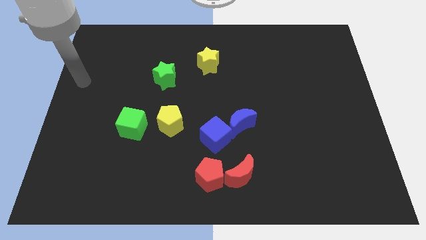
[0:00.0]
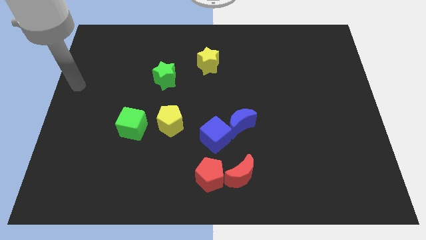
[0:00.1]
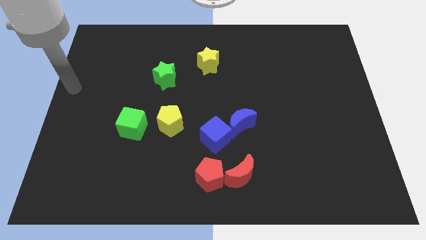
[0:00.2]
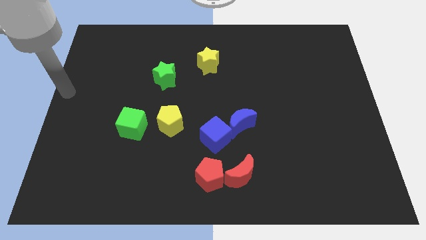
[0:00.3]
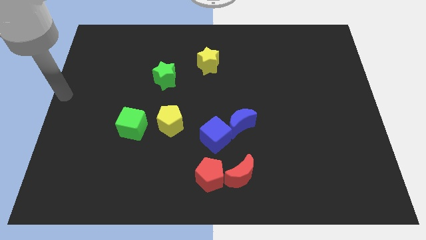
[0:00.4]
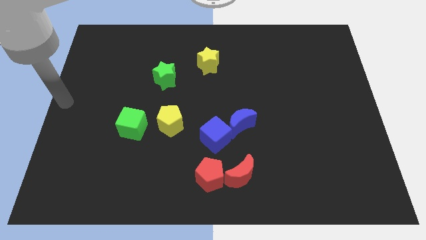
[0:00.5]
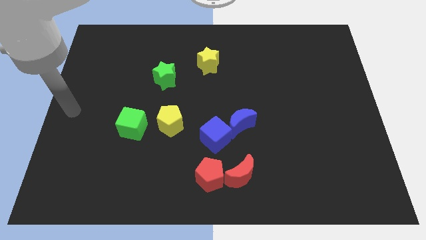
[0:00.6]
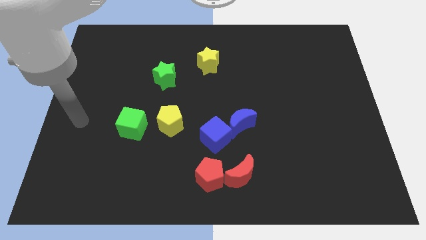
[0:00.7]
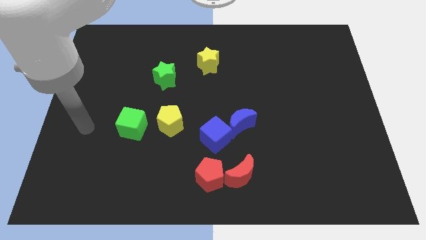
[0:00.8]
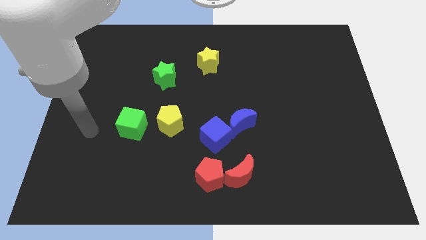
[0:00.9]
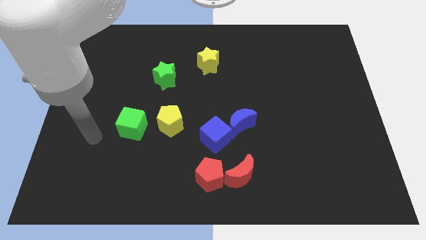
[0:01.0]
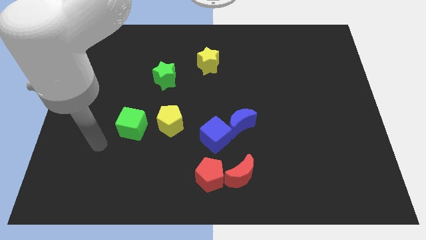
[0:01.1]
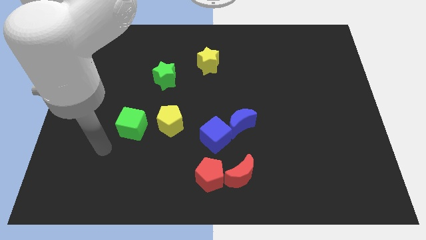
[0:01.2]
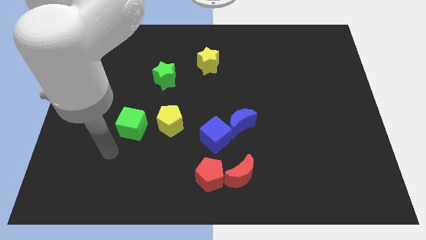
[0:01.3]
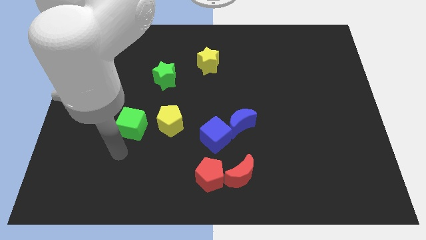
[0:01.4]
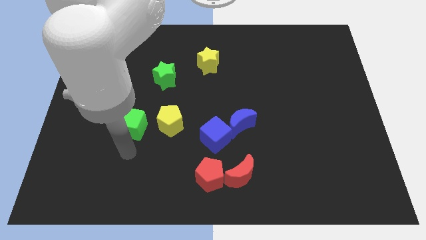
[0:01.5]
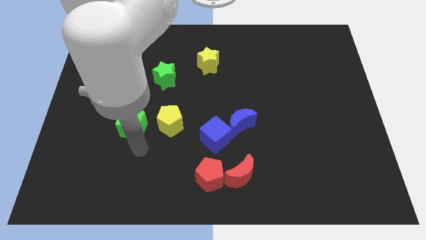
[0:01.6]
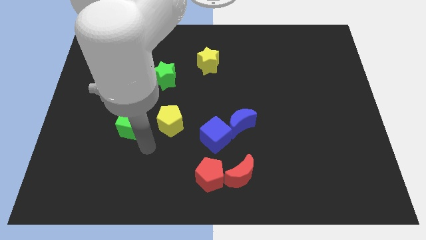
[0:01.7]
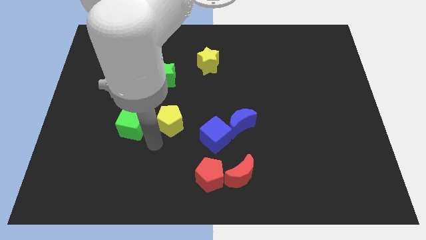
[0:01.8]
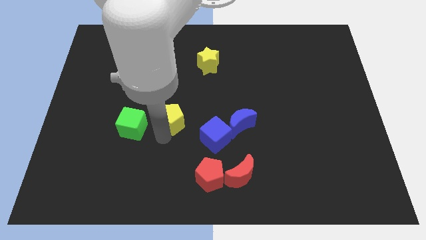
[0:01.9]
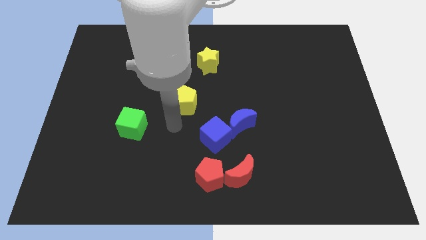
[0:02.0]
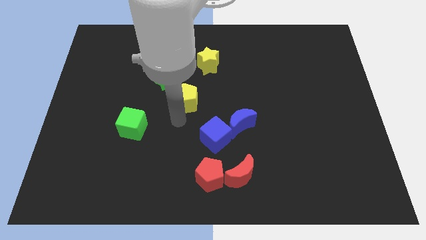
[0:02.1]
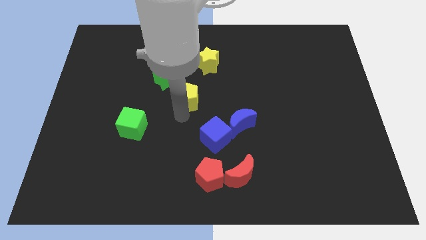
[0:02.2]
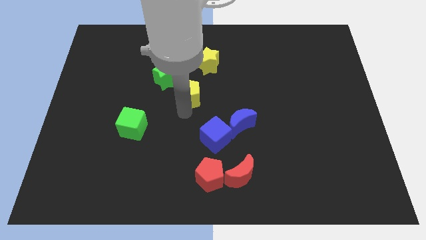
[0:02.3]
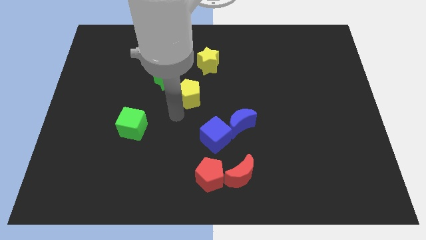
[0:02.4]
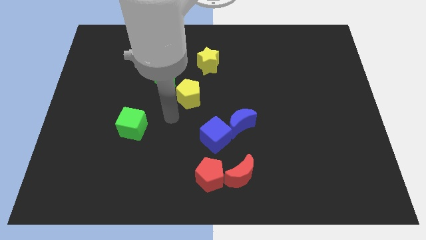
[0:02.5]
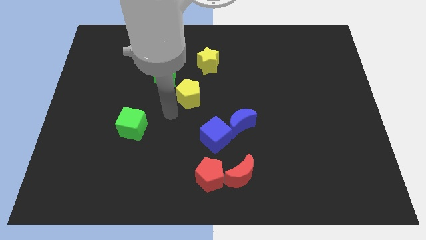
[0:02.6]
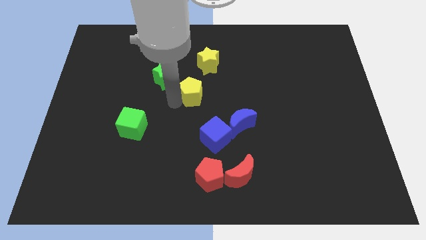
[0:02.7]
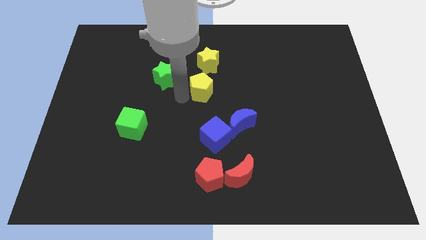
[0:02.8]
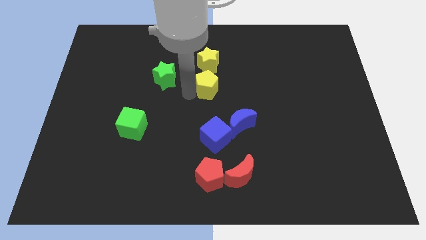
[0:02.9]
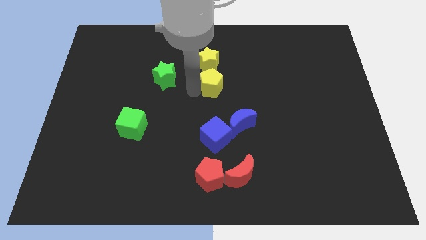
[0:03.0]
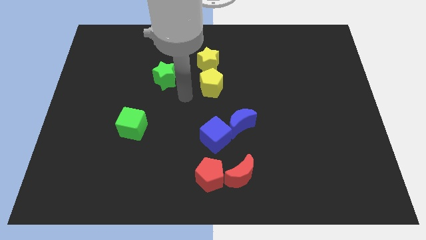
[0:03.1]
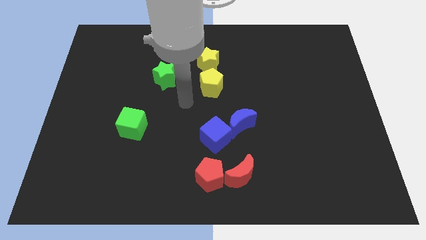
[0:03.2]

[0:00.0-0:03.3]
place the yellow pentagon below the yellow star

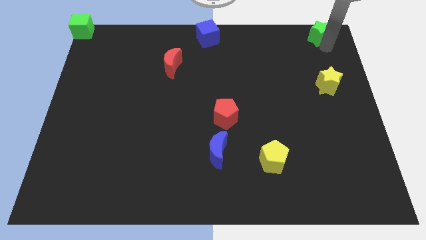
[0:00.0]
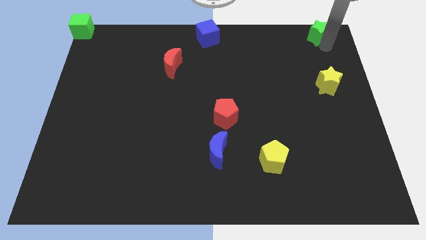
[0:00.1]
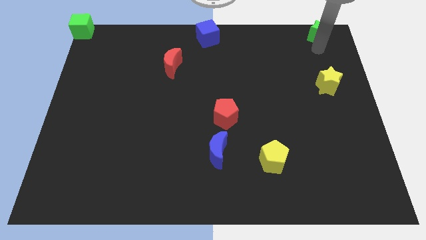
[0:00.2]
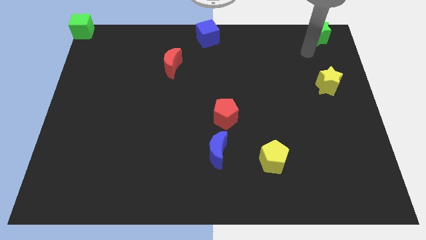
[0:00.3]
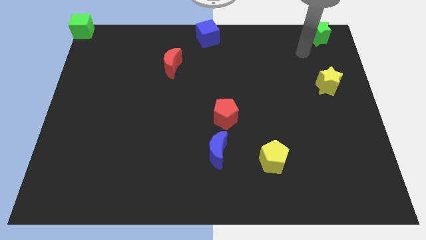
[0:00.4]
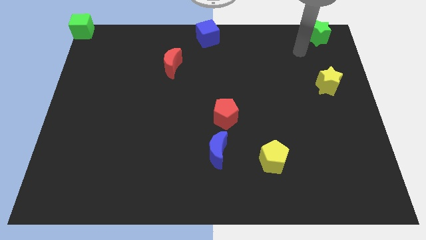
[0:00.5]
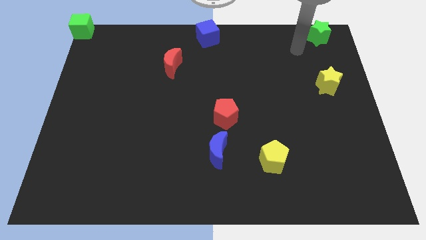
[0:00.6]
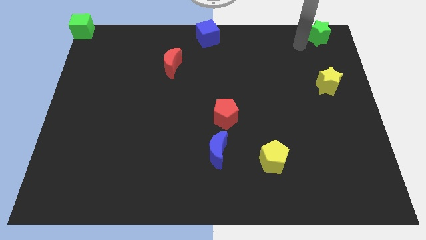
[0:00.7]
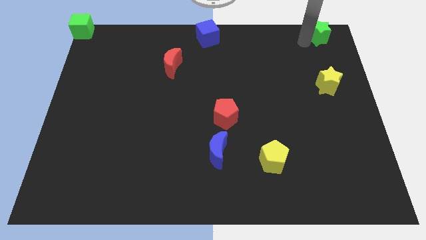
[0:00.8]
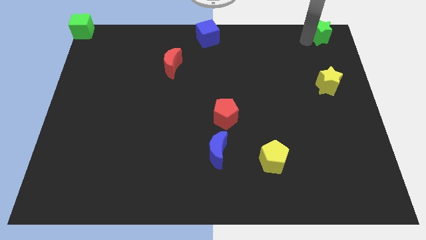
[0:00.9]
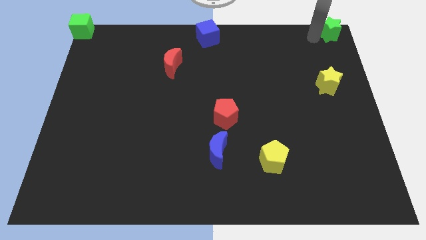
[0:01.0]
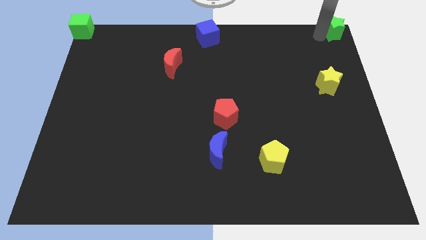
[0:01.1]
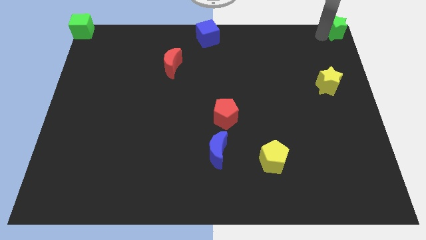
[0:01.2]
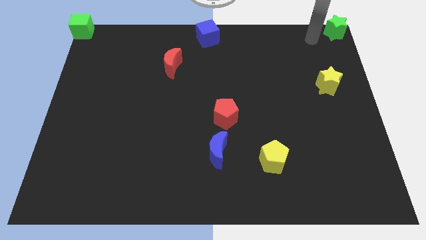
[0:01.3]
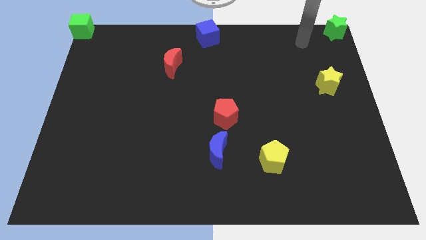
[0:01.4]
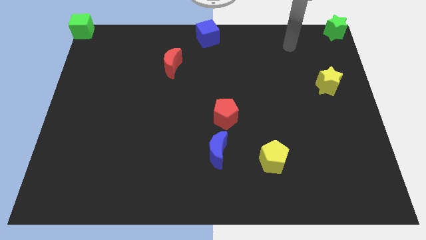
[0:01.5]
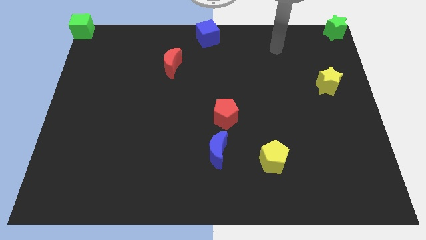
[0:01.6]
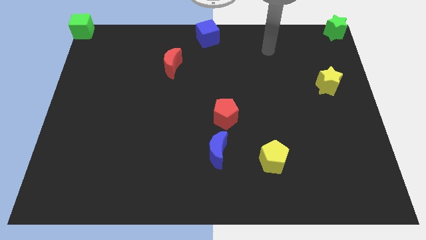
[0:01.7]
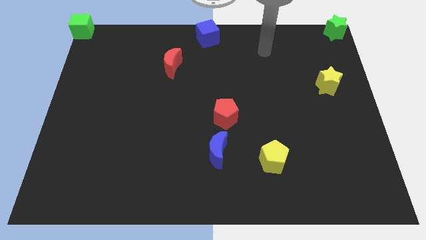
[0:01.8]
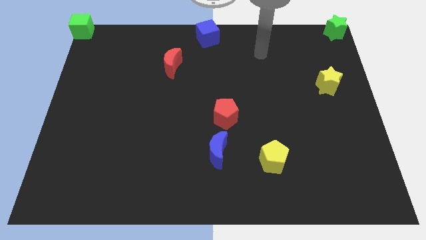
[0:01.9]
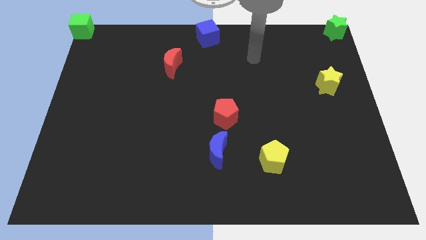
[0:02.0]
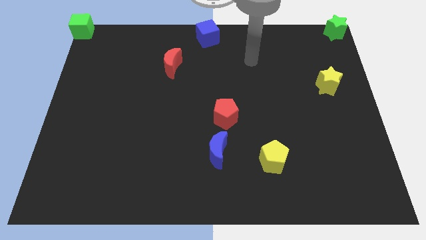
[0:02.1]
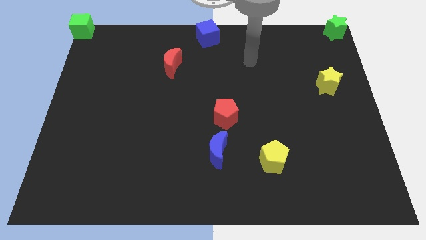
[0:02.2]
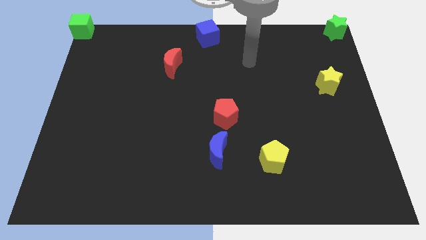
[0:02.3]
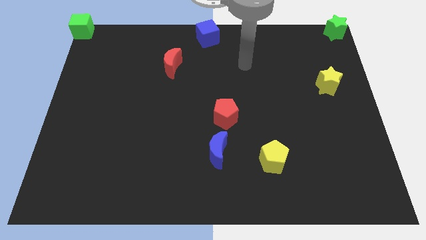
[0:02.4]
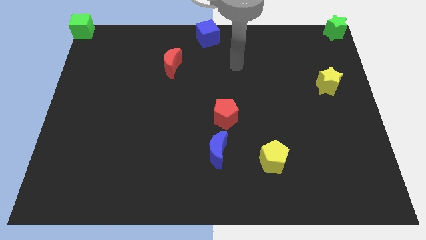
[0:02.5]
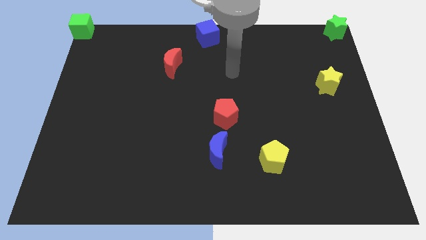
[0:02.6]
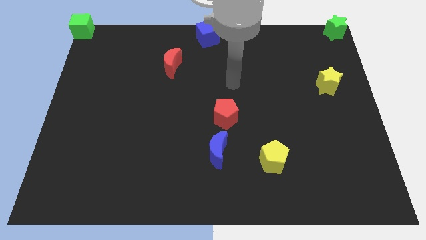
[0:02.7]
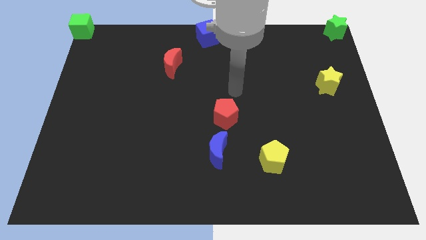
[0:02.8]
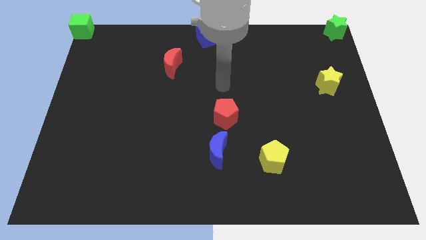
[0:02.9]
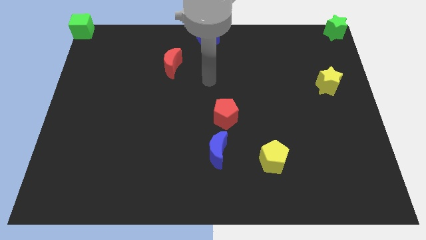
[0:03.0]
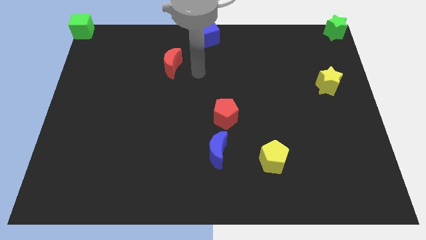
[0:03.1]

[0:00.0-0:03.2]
move the green star diagonally top right to the yellow star

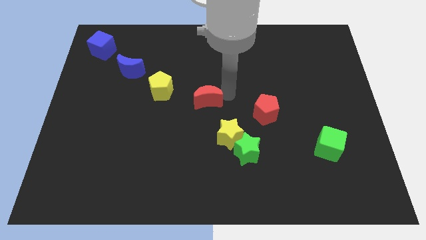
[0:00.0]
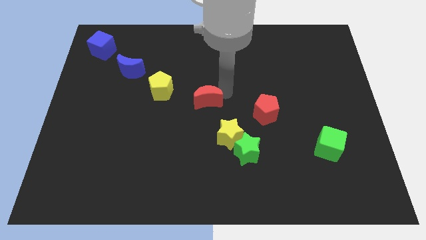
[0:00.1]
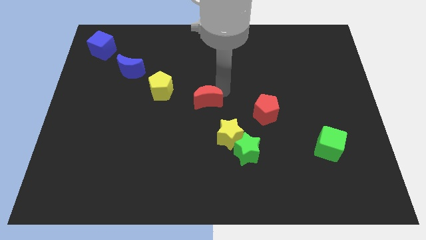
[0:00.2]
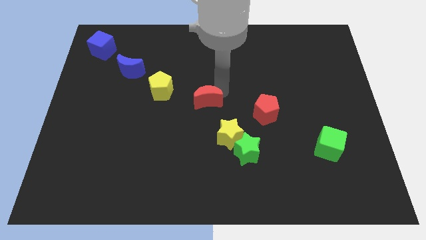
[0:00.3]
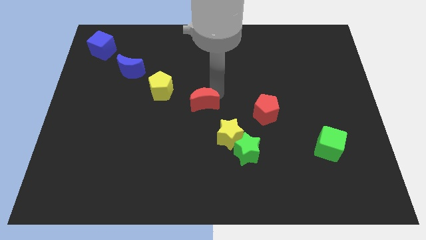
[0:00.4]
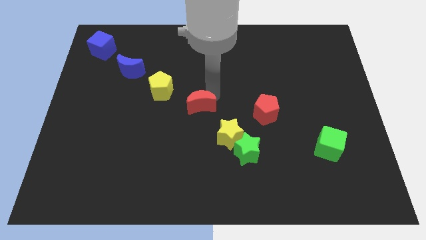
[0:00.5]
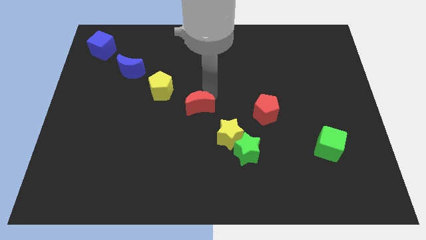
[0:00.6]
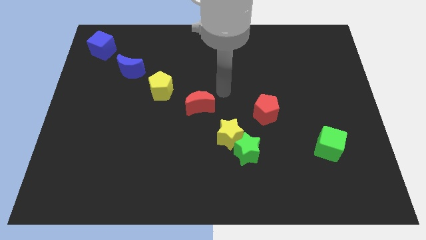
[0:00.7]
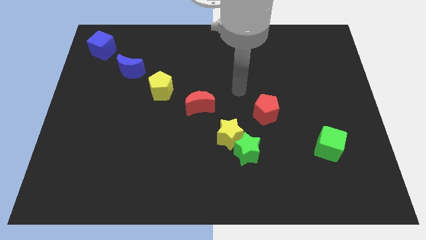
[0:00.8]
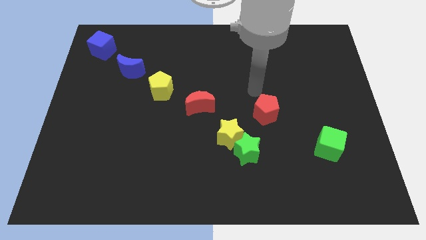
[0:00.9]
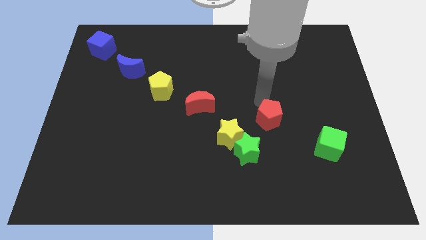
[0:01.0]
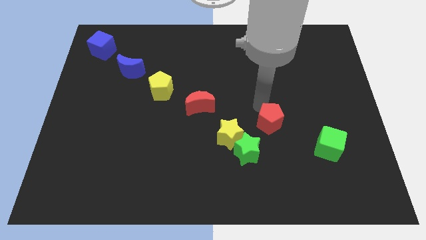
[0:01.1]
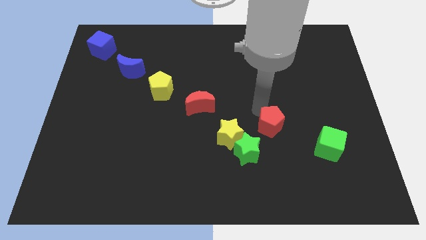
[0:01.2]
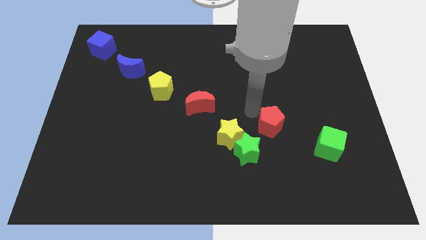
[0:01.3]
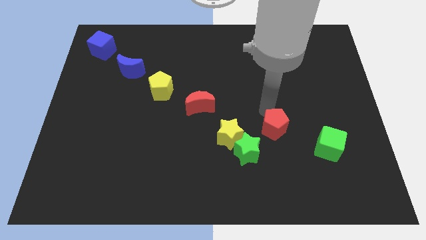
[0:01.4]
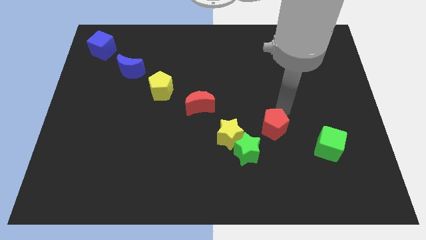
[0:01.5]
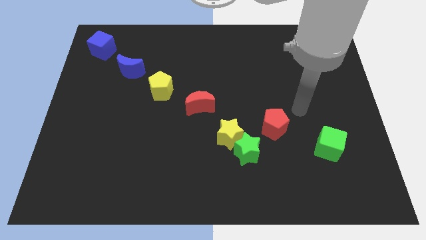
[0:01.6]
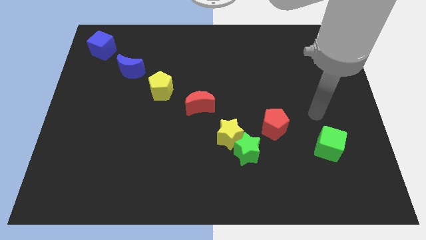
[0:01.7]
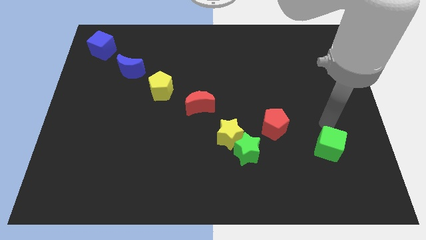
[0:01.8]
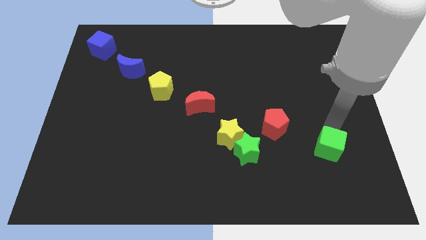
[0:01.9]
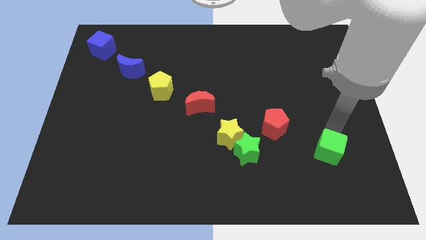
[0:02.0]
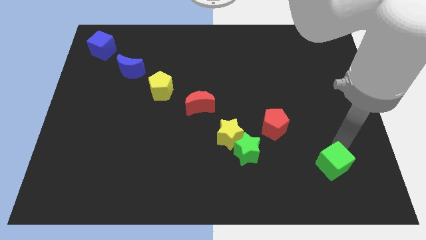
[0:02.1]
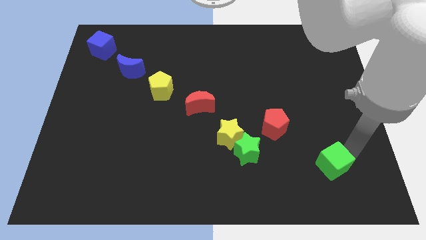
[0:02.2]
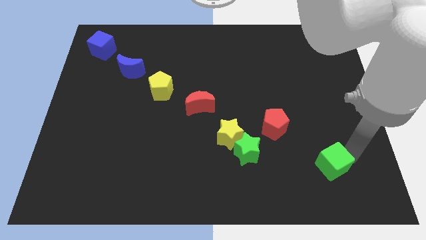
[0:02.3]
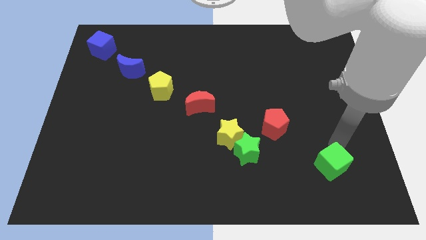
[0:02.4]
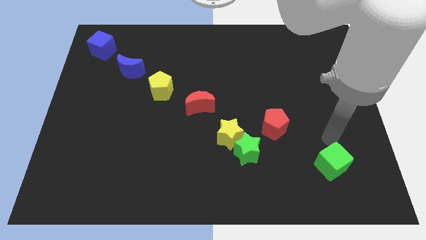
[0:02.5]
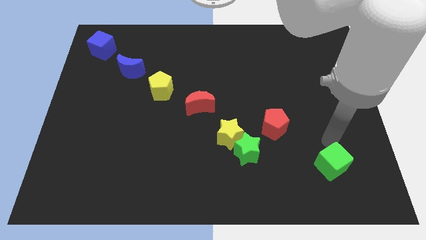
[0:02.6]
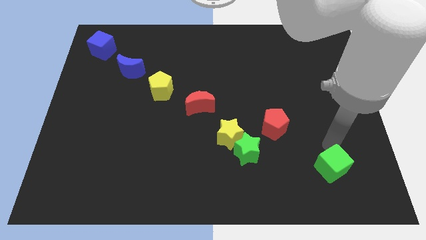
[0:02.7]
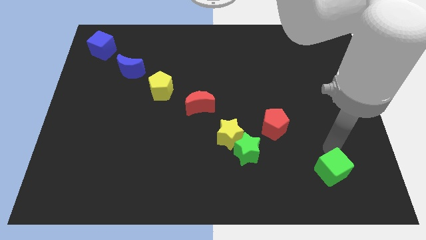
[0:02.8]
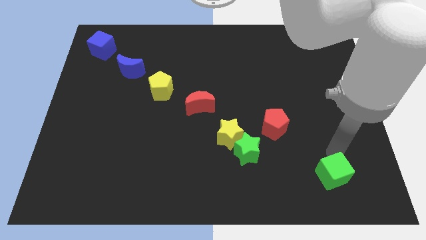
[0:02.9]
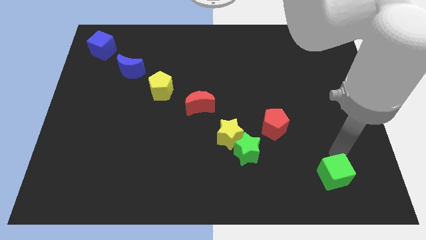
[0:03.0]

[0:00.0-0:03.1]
slightly move the red crescent red pentagon and green cube towards the left
